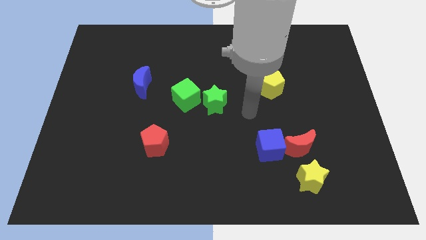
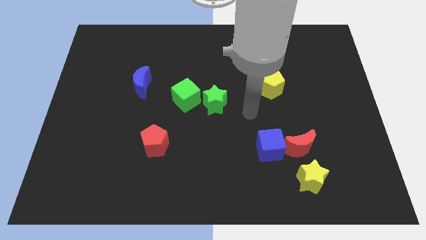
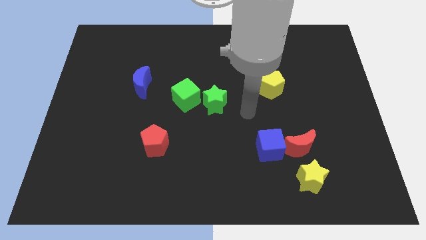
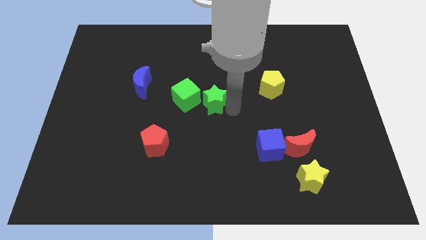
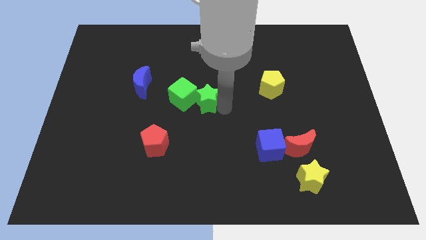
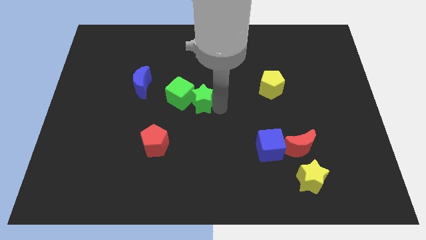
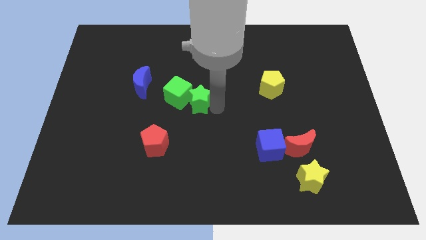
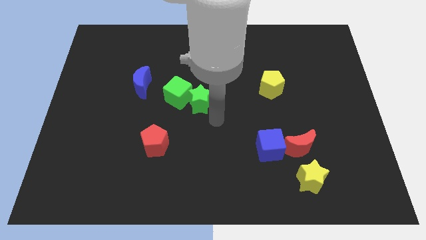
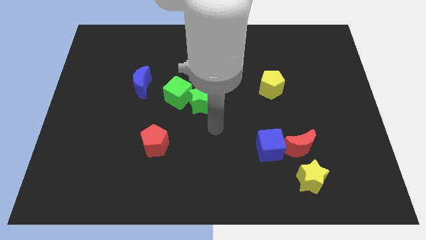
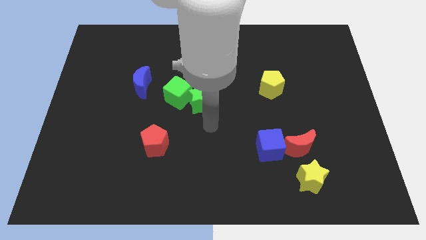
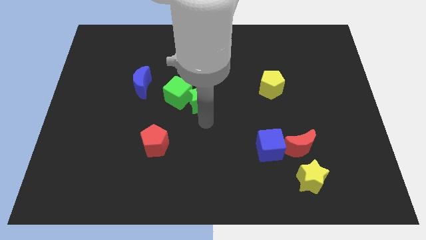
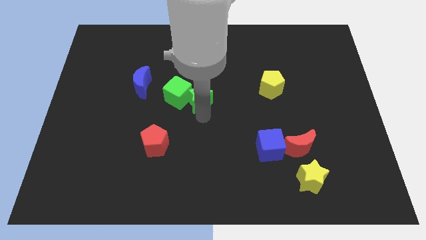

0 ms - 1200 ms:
push green star into green cube

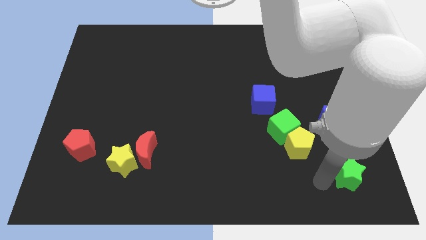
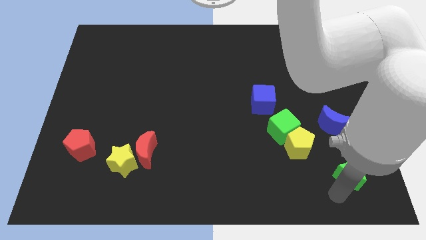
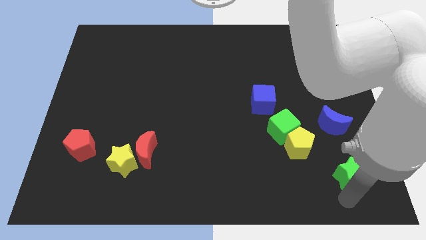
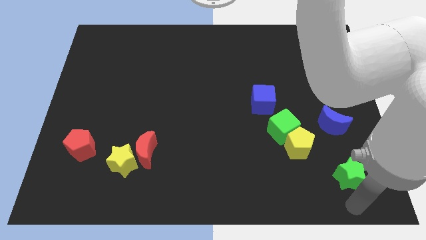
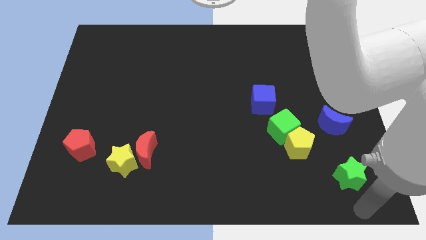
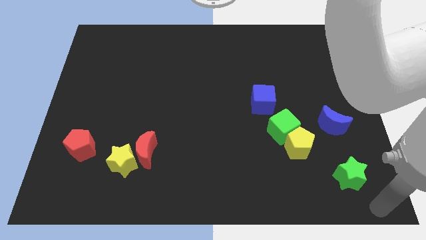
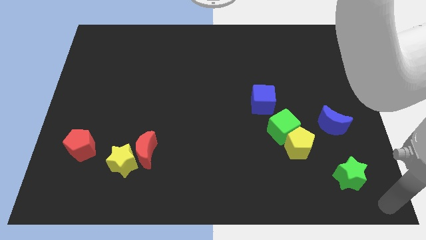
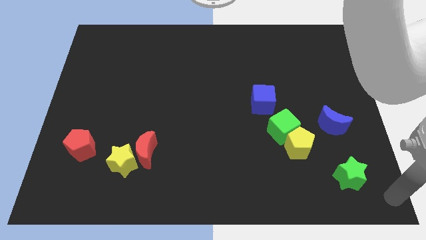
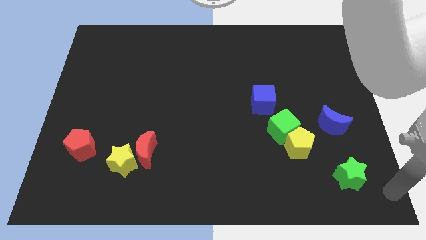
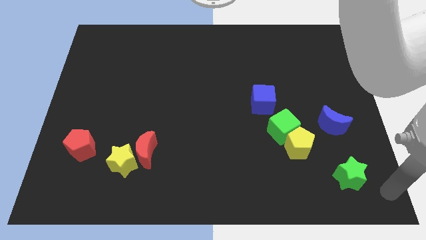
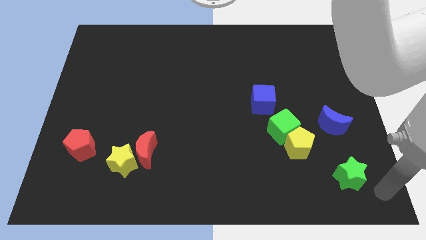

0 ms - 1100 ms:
move your arm to the bottom right of the board

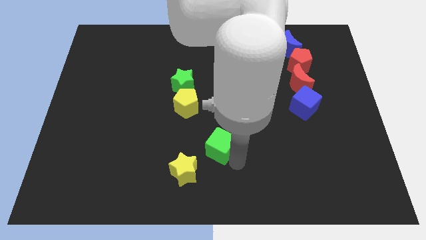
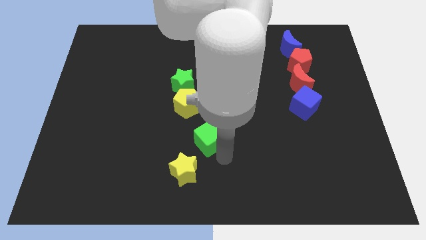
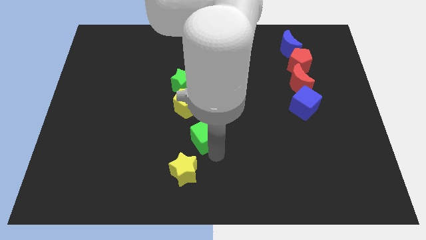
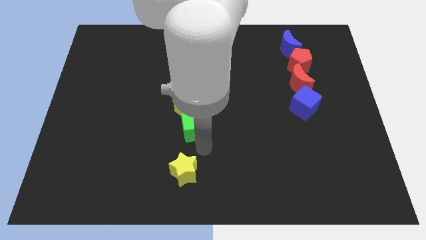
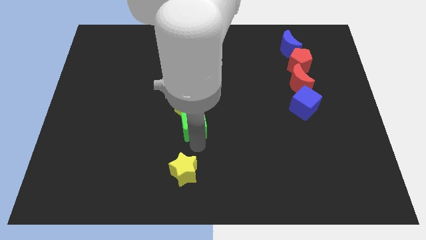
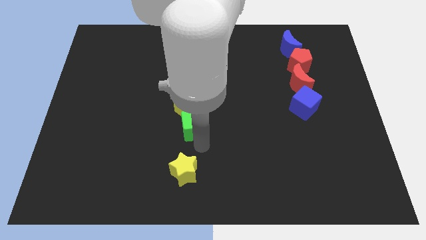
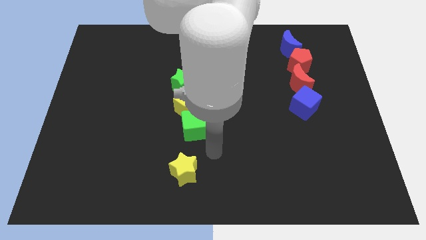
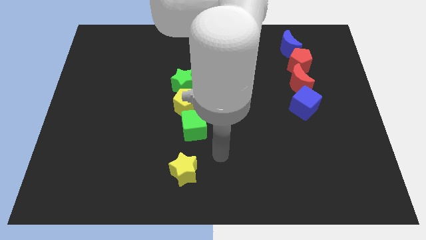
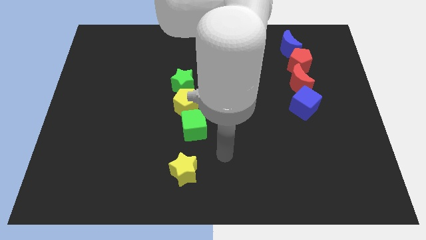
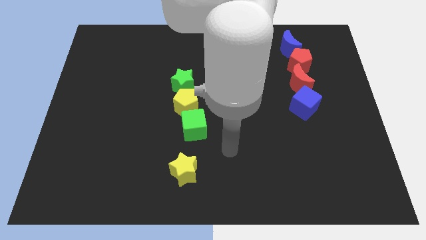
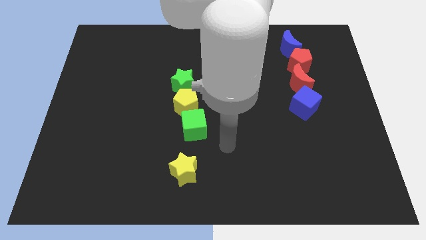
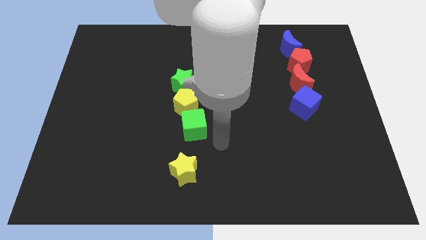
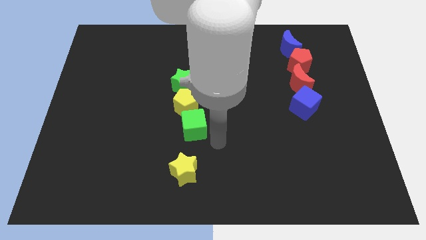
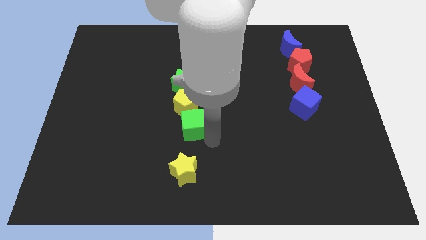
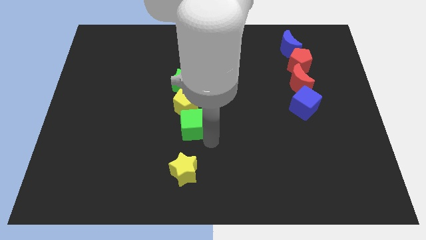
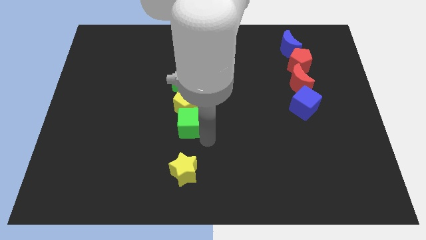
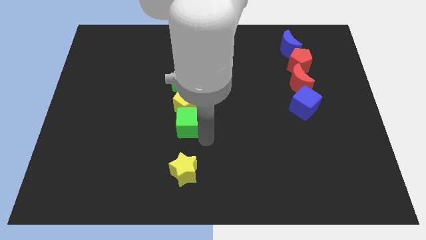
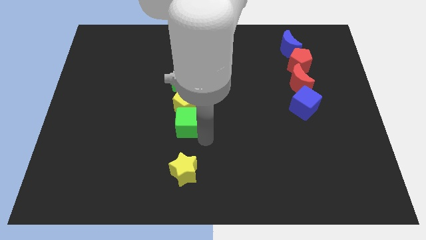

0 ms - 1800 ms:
place the green cube to the bottom of yellow pentagon

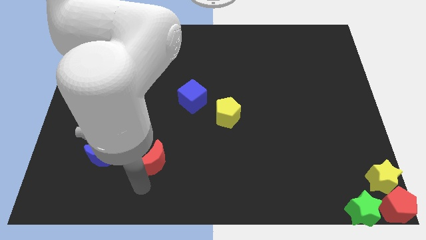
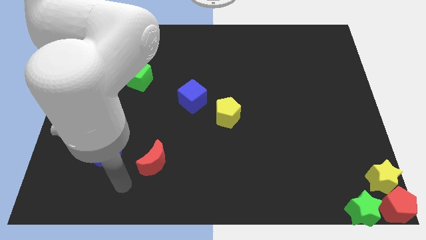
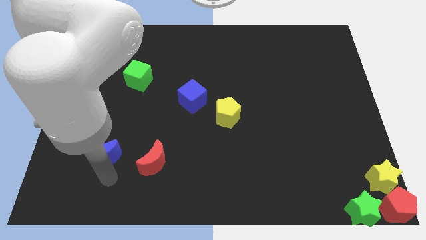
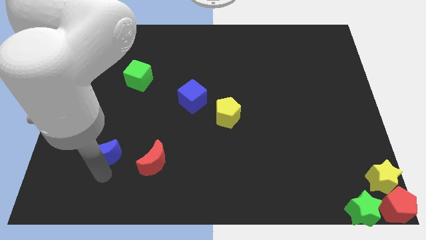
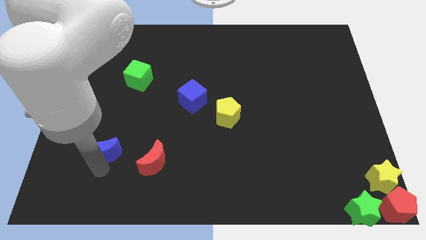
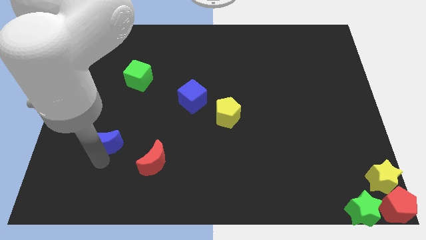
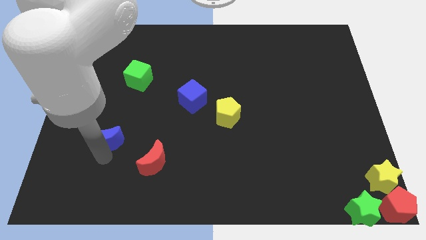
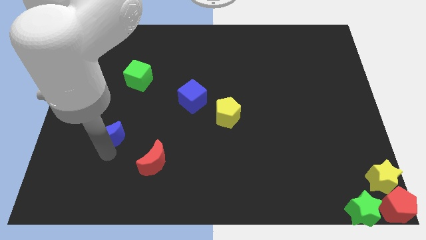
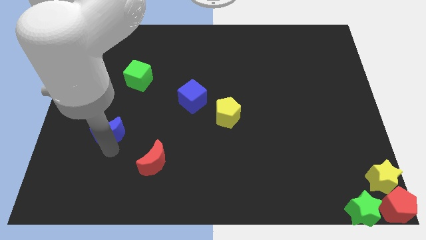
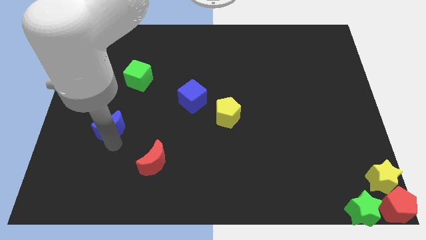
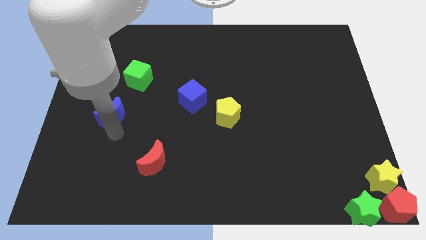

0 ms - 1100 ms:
push the blue crescent slightly to the top

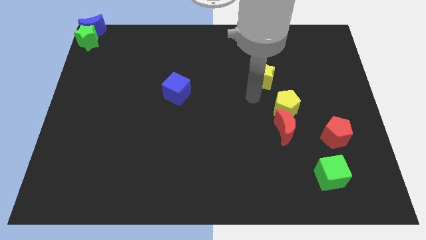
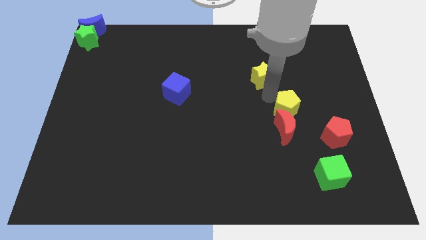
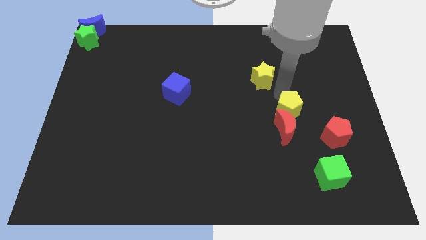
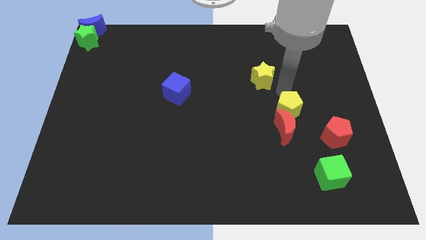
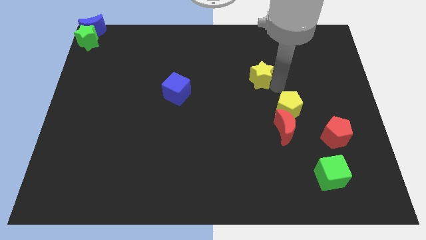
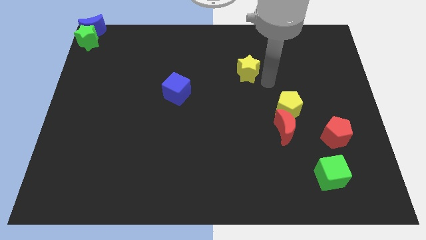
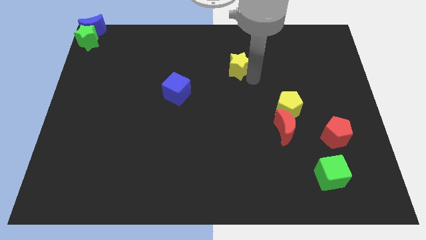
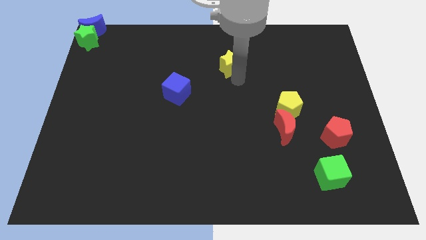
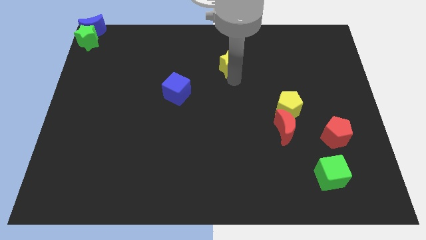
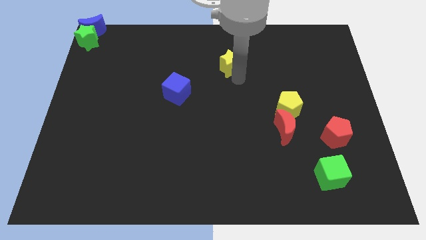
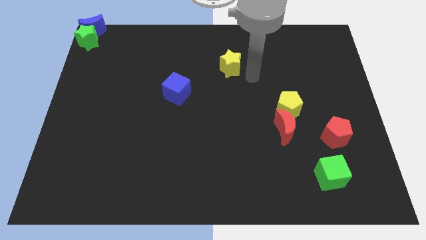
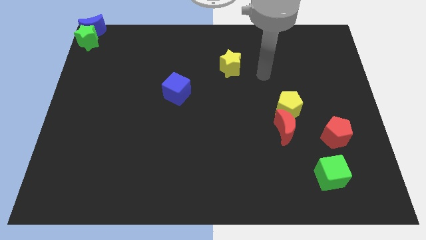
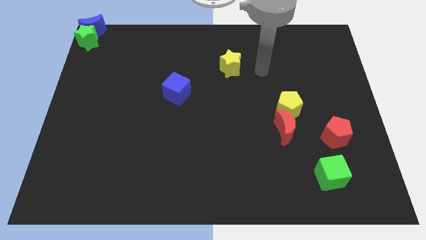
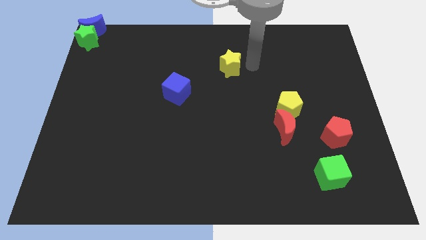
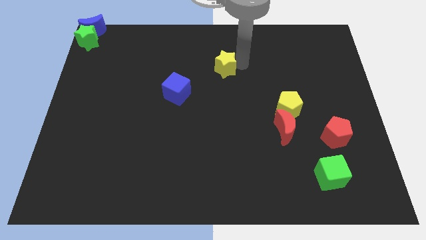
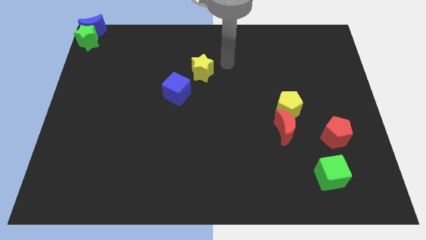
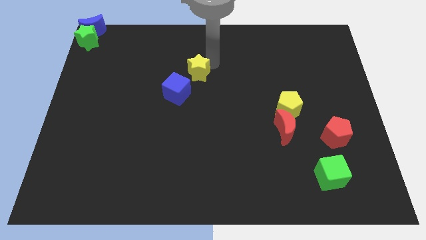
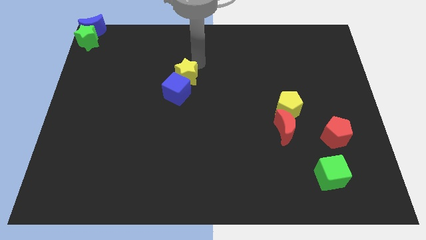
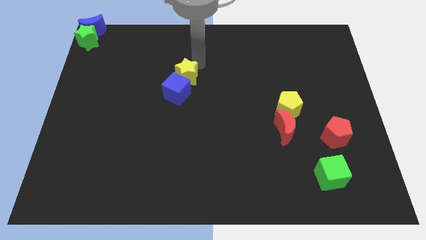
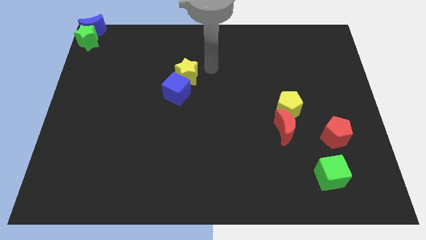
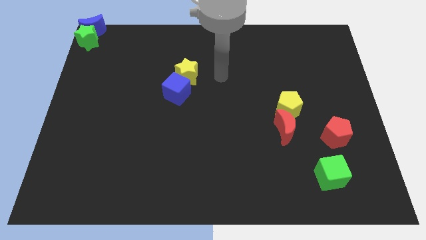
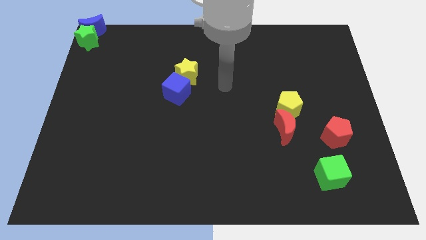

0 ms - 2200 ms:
move yellow star above blue cube

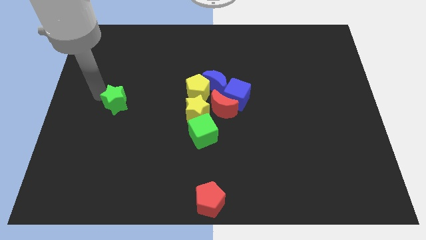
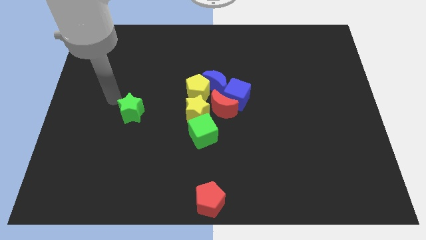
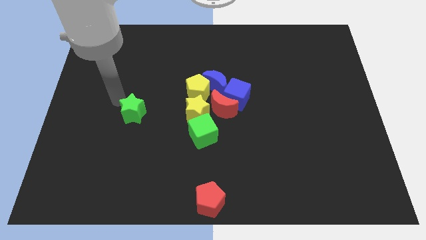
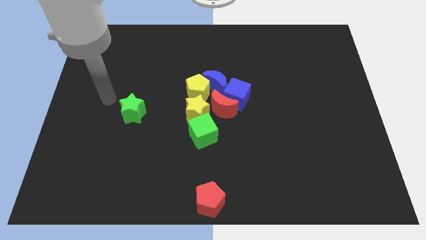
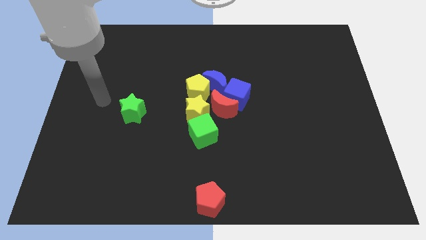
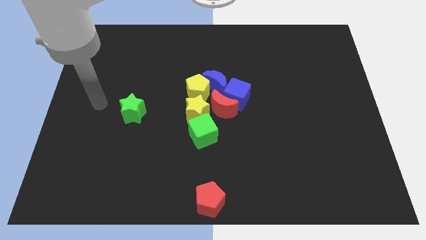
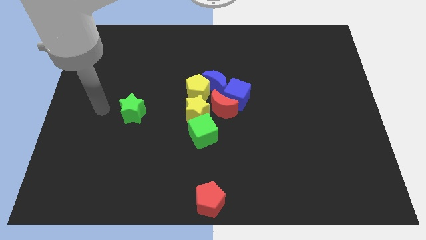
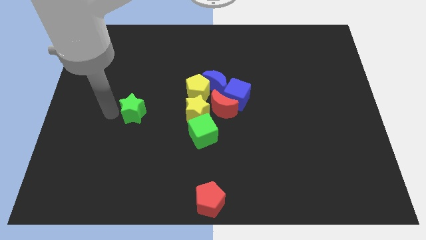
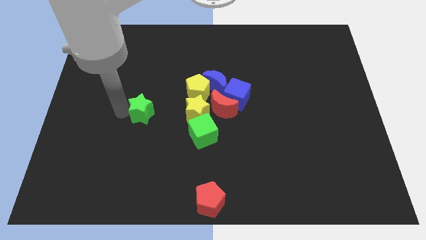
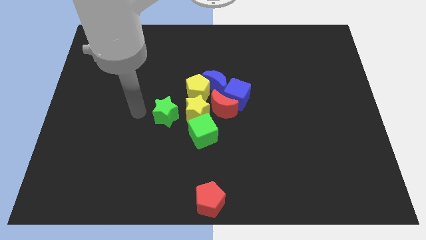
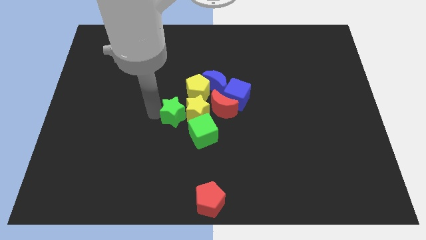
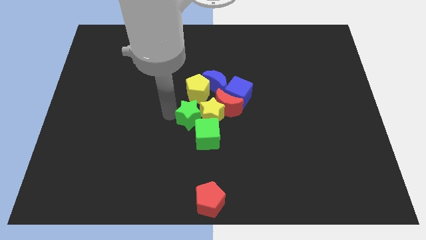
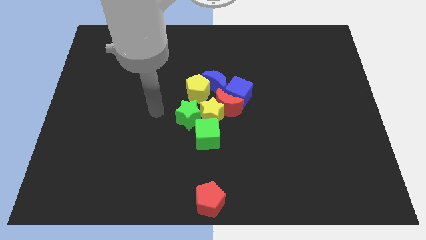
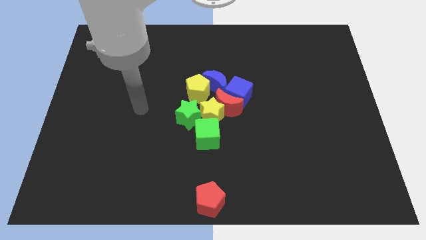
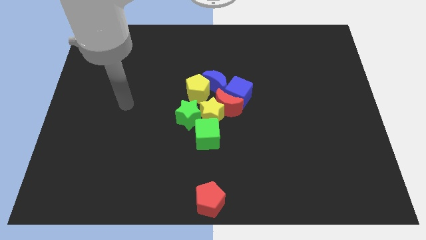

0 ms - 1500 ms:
move the green star into the yellow star
